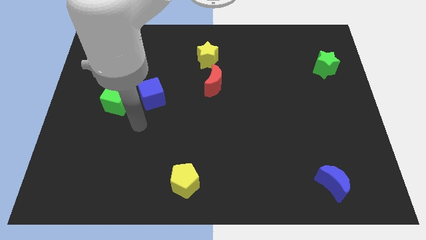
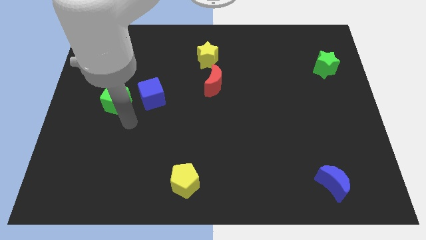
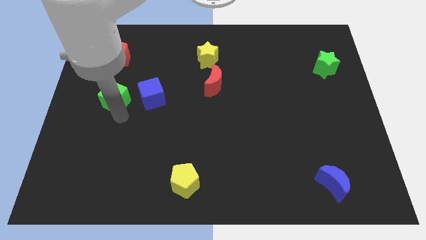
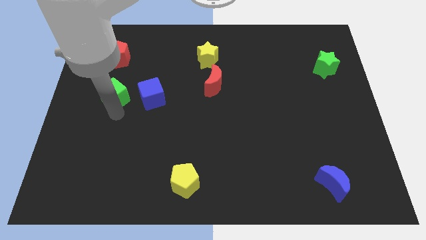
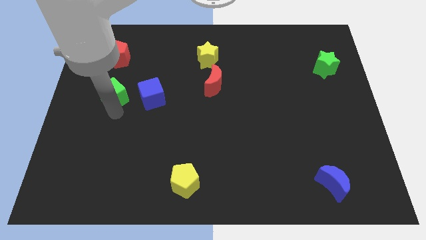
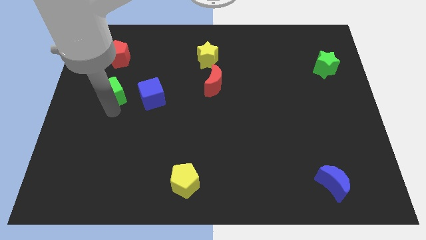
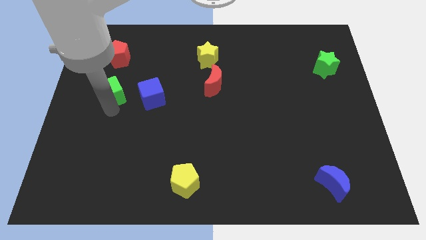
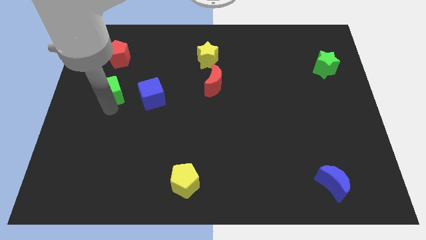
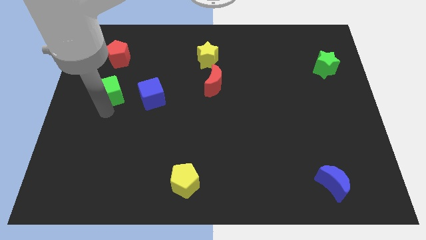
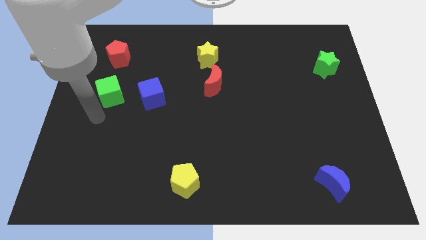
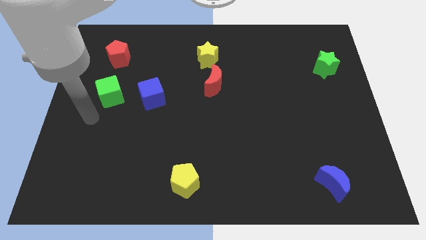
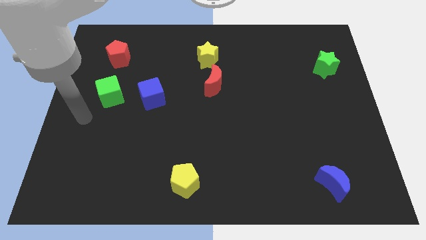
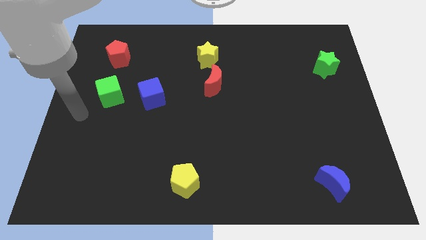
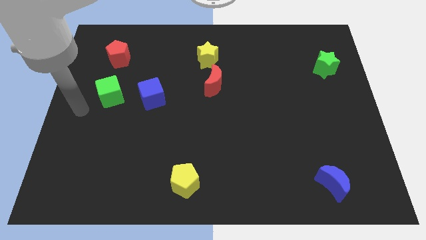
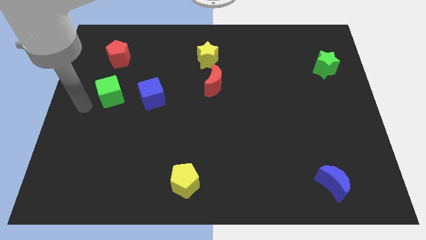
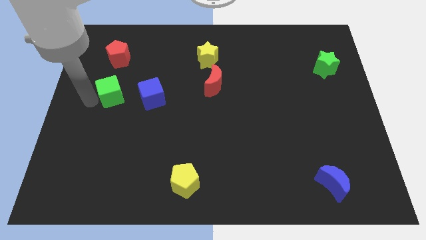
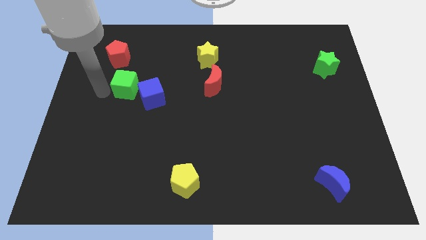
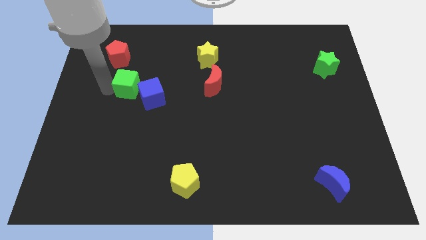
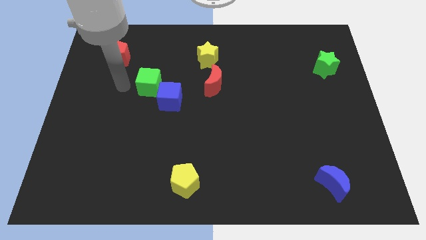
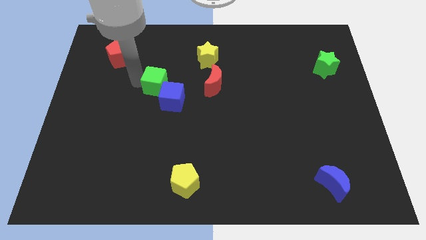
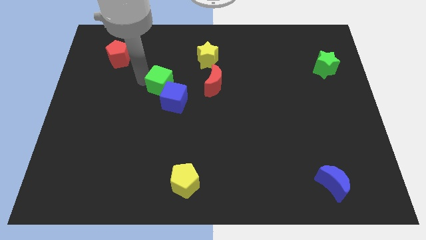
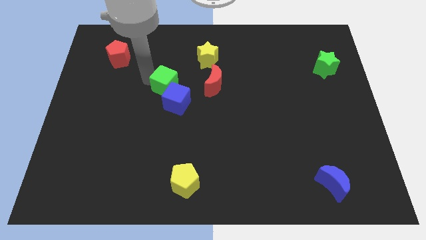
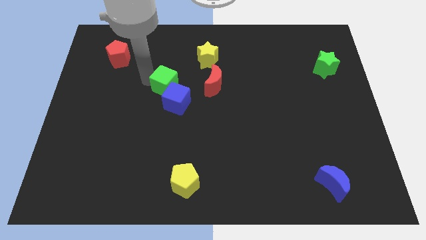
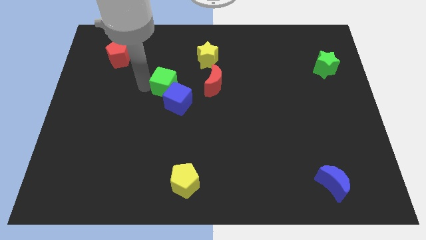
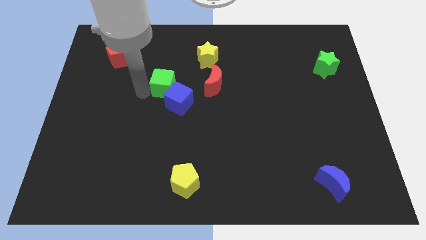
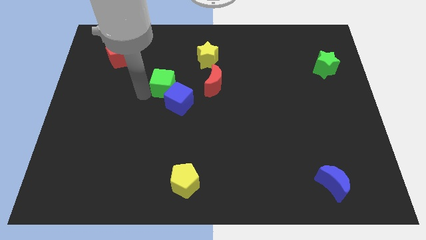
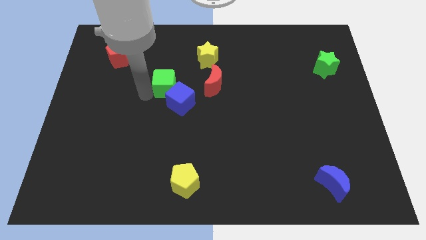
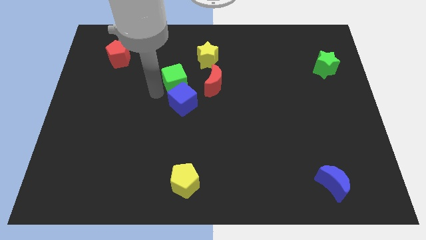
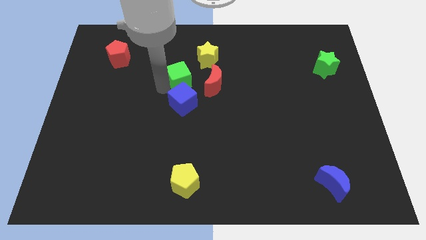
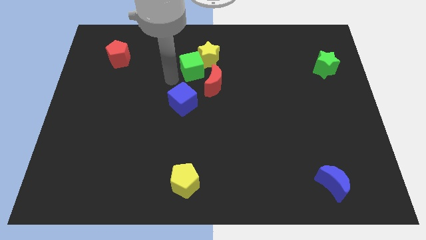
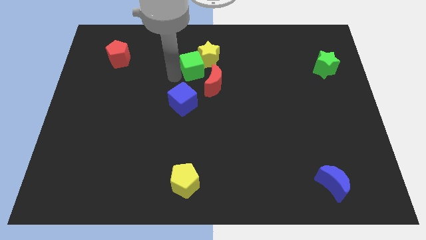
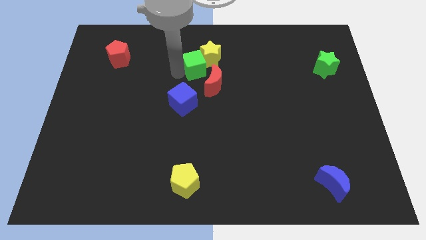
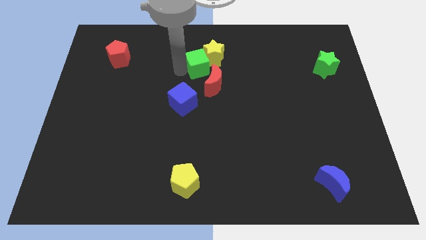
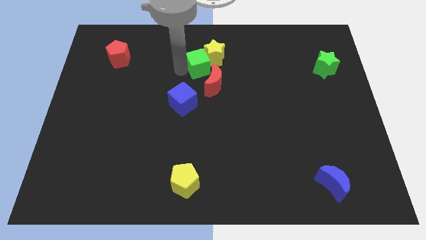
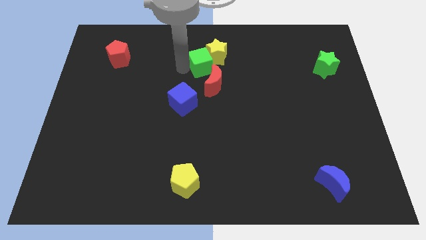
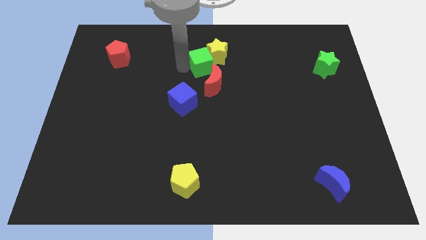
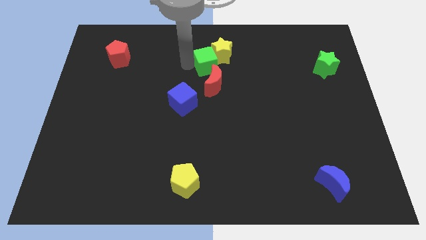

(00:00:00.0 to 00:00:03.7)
push green cube in to yellow star

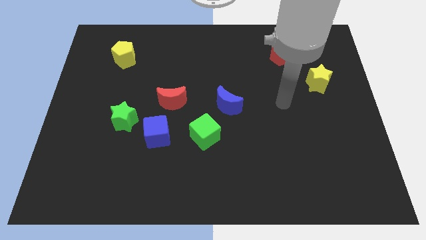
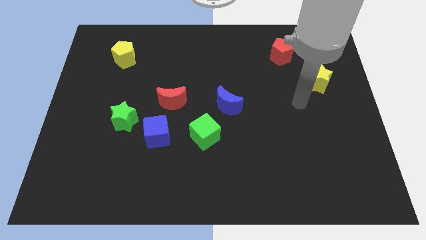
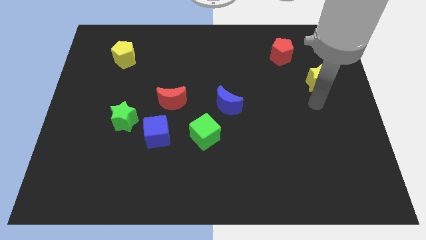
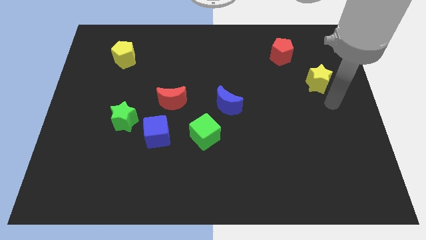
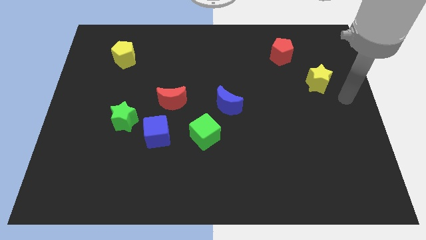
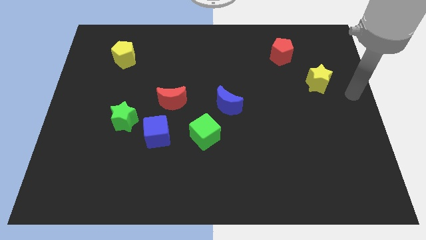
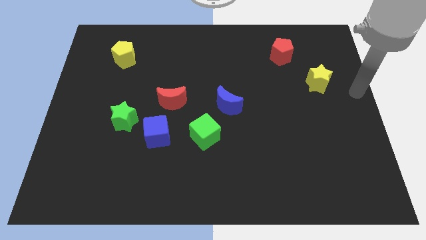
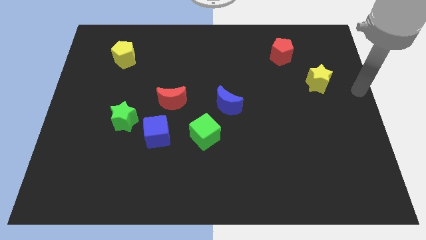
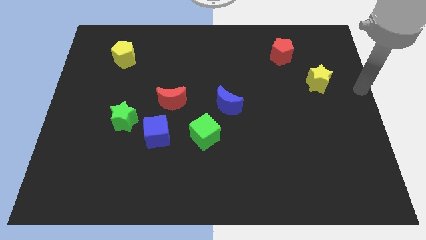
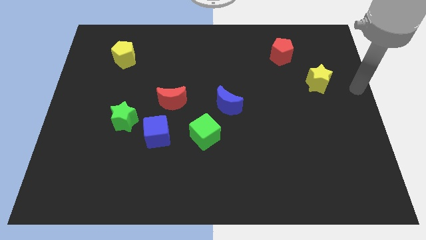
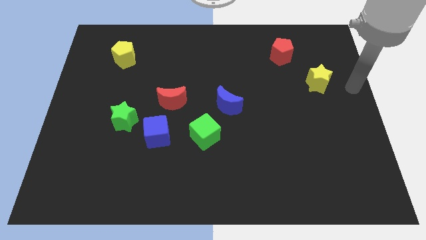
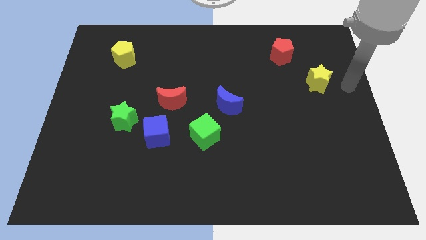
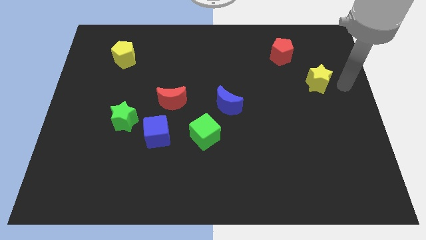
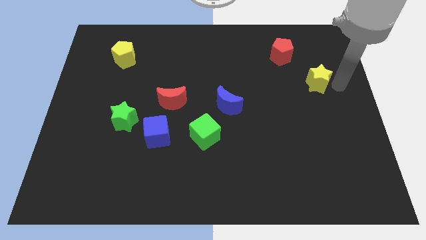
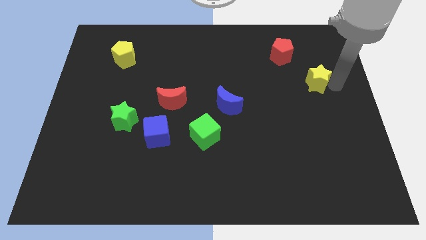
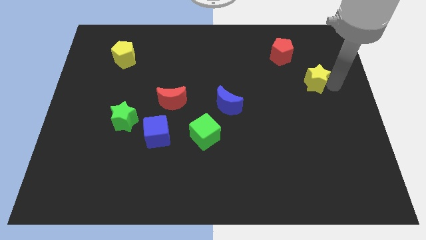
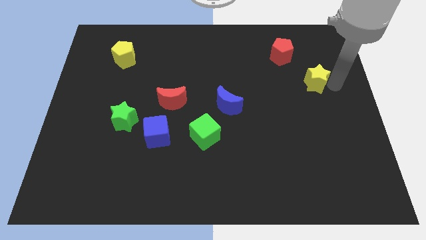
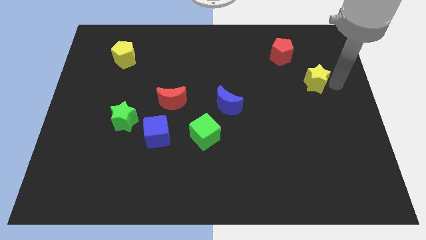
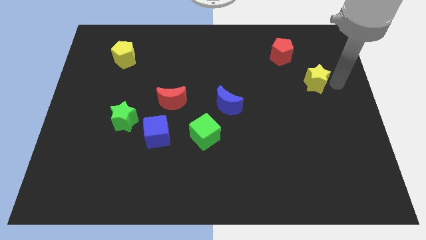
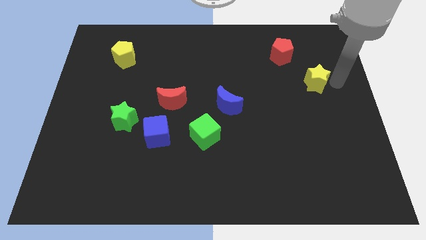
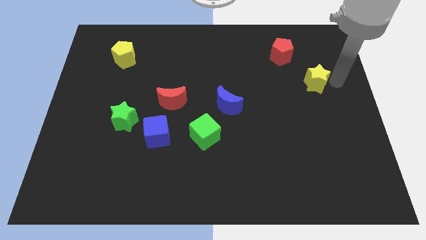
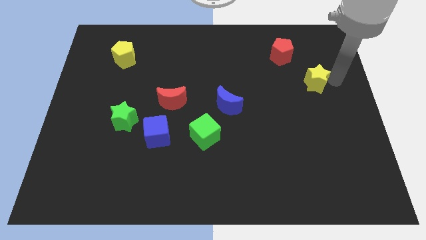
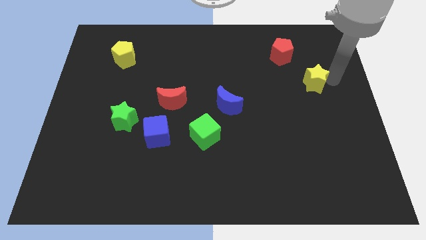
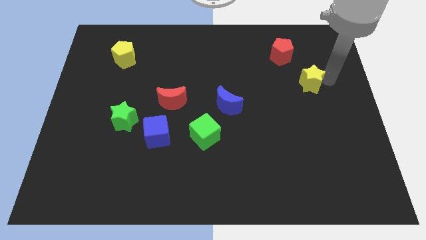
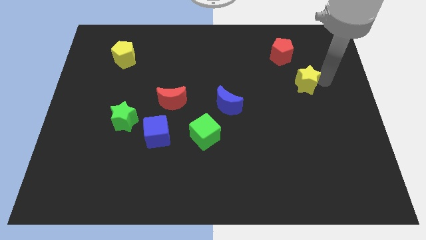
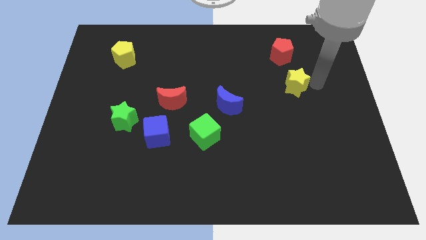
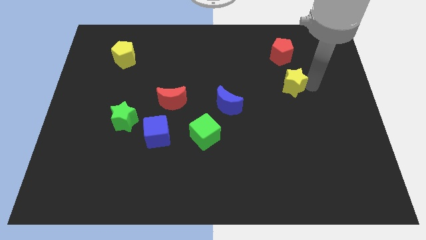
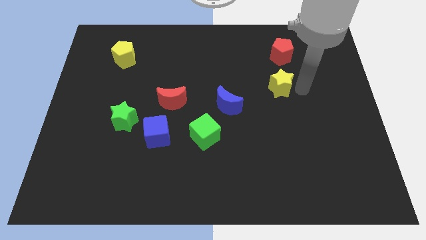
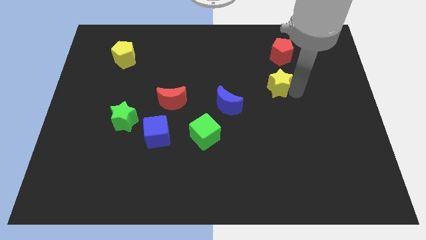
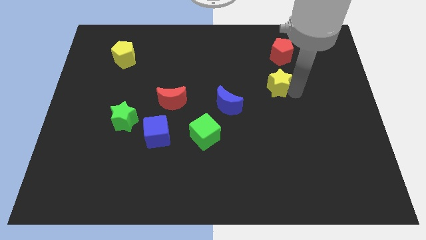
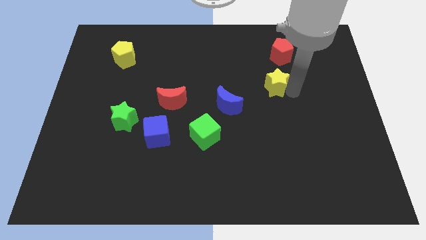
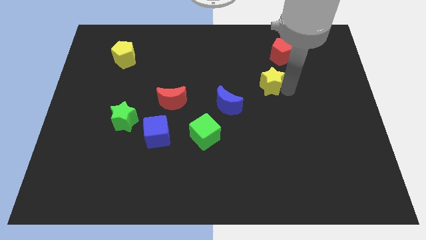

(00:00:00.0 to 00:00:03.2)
move the yellow star below the red pentagon

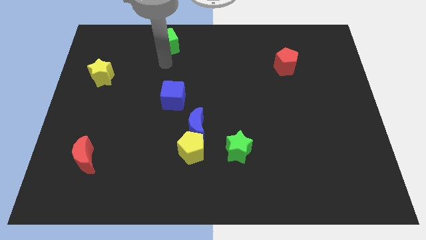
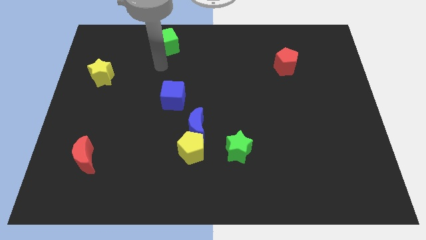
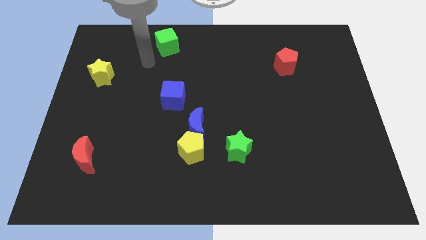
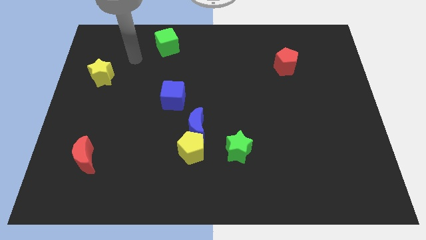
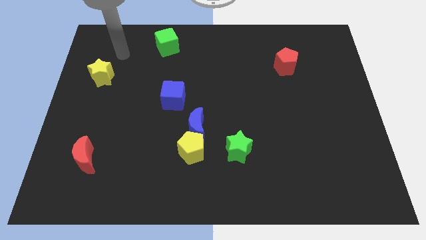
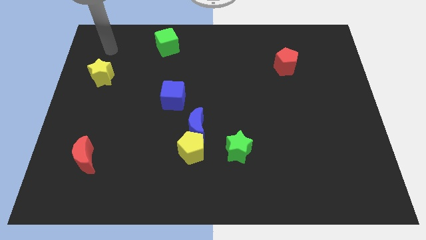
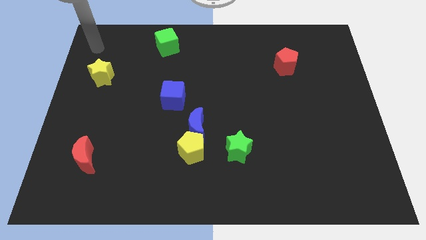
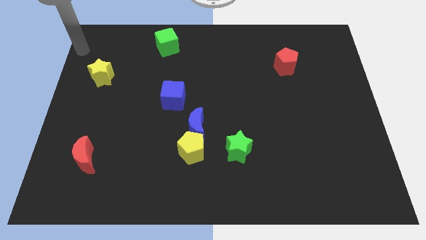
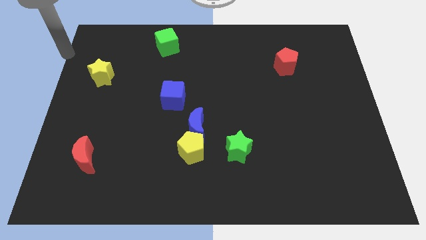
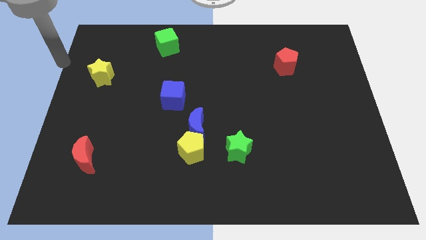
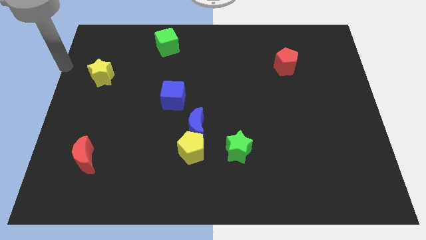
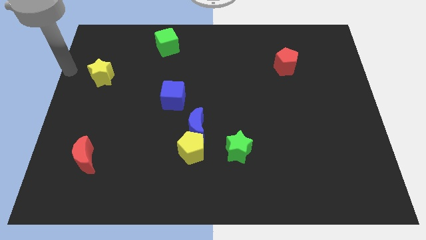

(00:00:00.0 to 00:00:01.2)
point your arm at the left of the yellow star

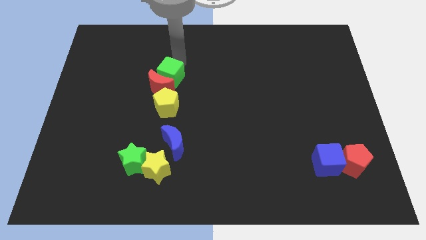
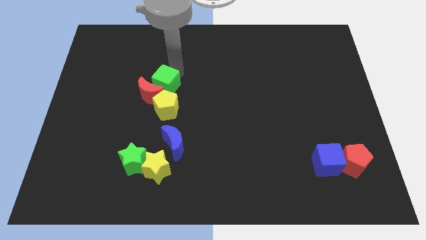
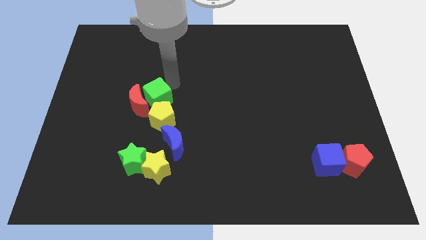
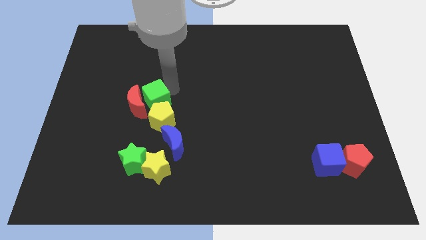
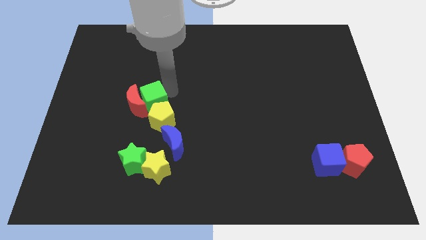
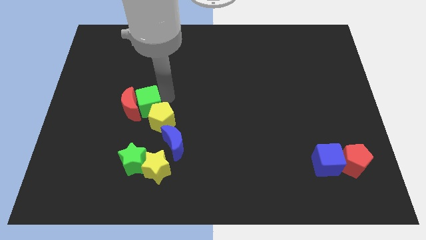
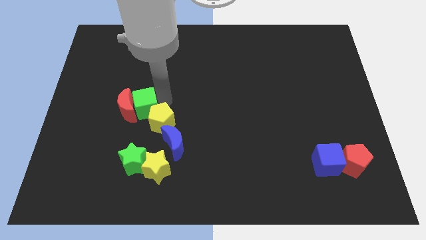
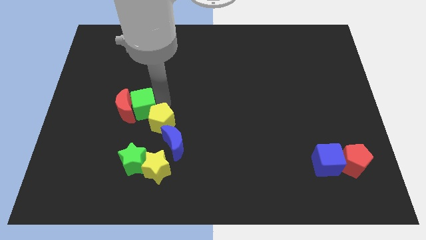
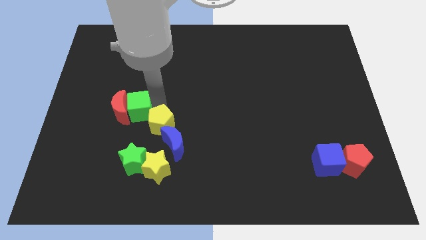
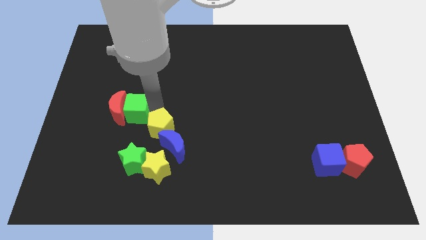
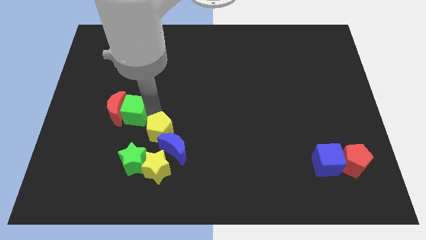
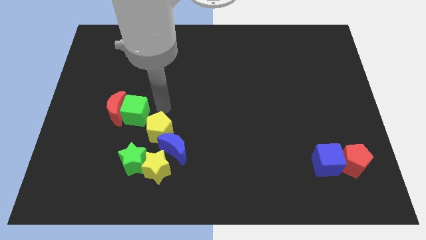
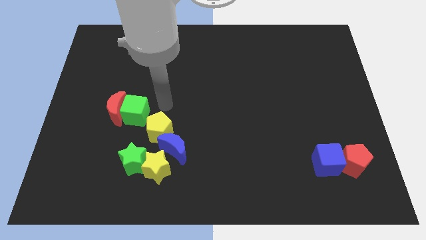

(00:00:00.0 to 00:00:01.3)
move the green cube along with the red crescent to the left of the yellow pentagon
